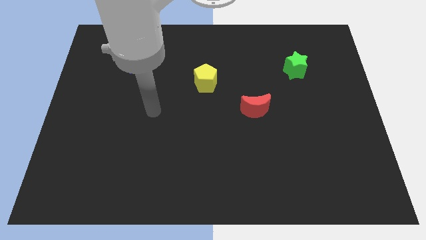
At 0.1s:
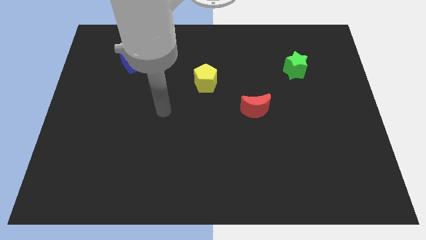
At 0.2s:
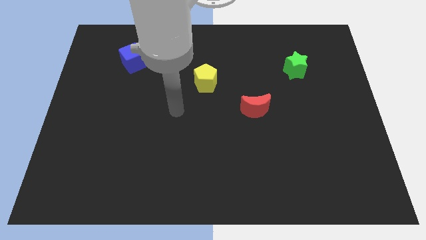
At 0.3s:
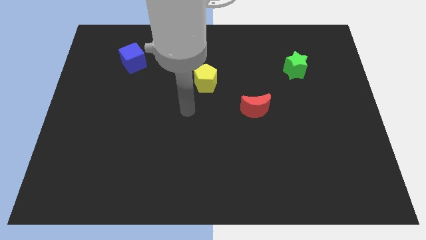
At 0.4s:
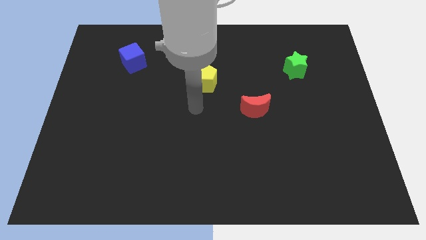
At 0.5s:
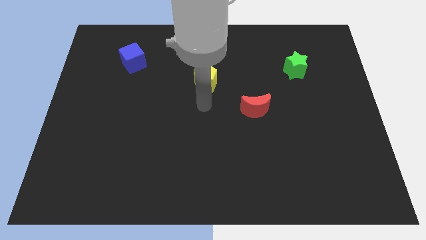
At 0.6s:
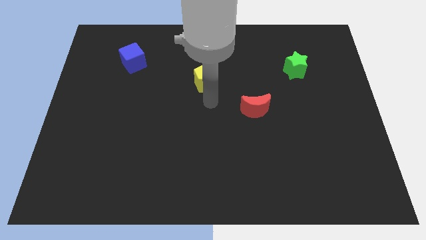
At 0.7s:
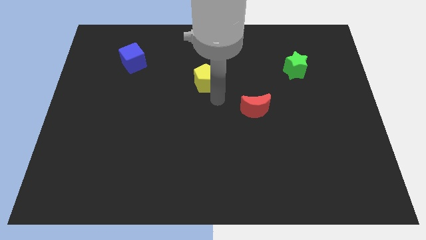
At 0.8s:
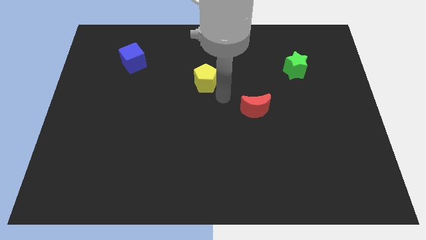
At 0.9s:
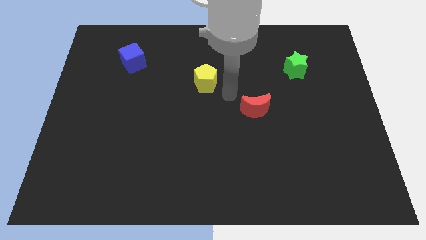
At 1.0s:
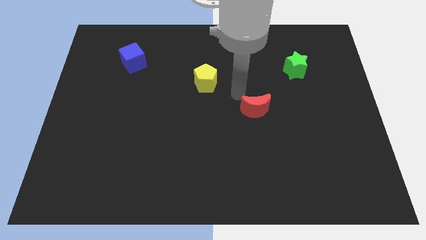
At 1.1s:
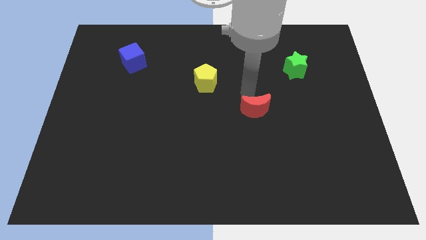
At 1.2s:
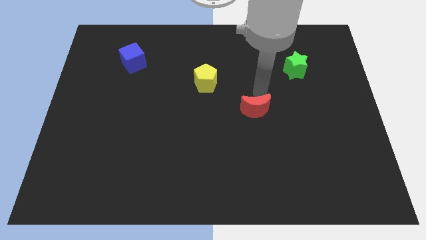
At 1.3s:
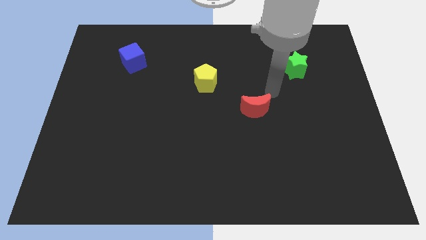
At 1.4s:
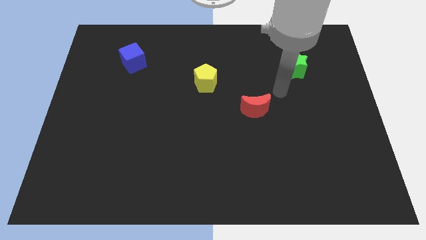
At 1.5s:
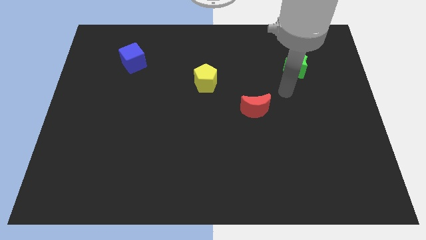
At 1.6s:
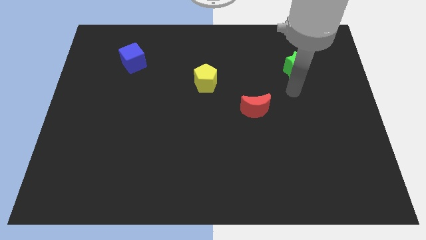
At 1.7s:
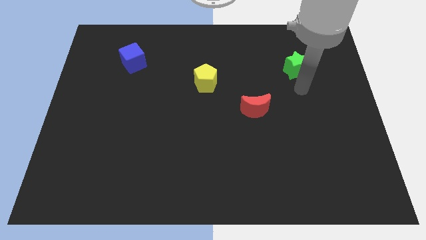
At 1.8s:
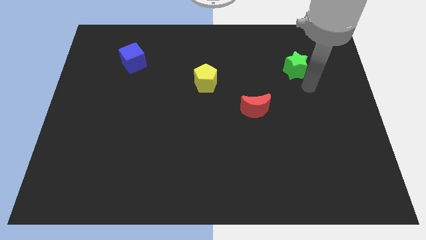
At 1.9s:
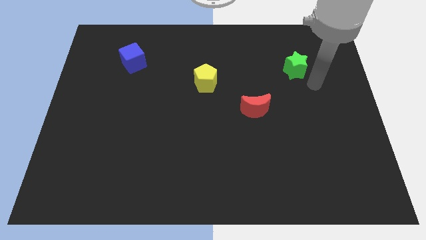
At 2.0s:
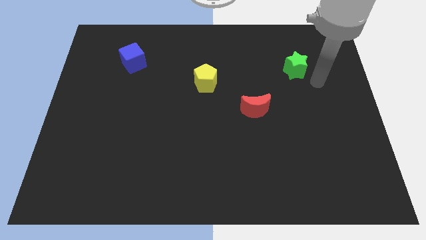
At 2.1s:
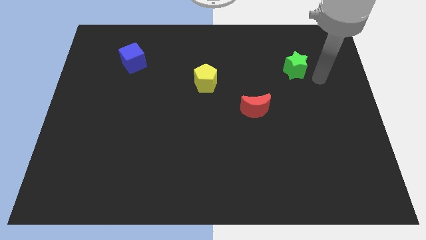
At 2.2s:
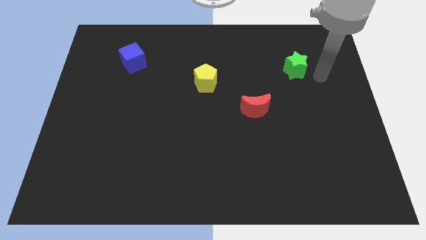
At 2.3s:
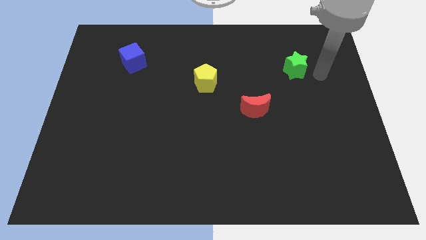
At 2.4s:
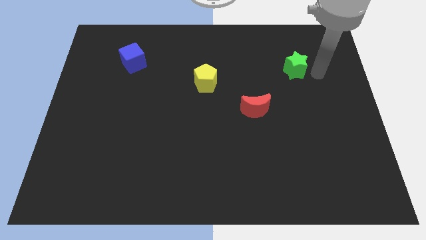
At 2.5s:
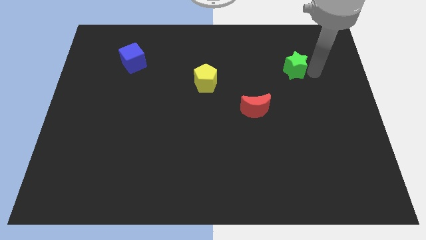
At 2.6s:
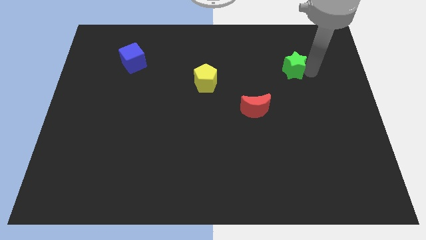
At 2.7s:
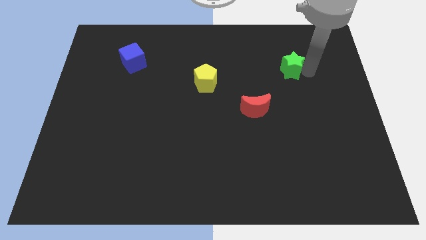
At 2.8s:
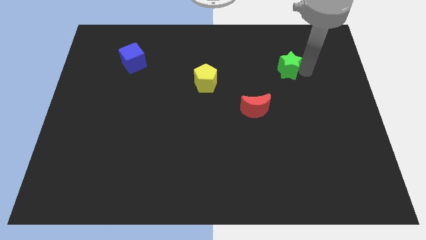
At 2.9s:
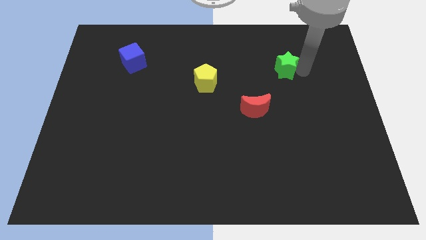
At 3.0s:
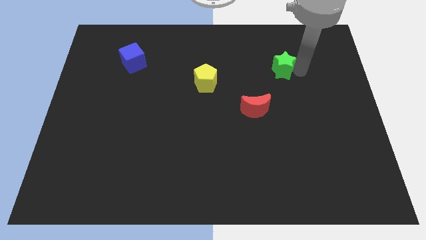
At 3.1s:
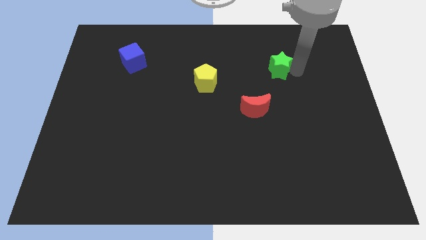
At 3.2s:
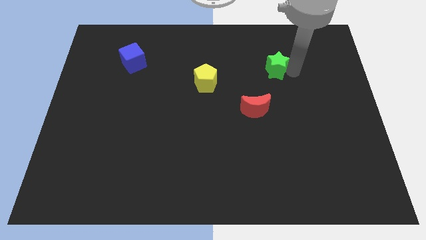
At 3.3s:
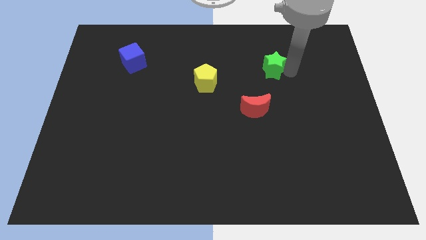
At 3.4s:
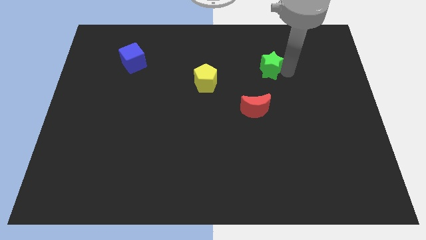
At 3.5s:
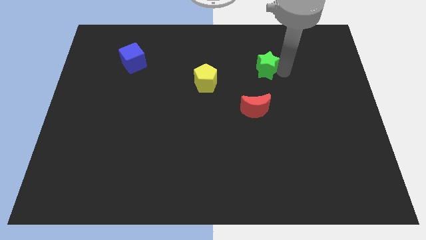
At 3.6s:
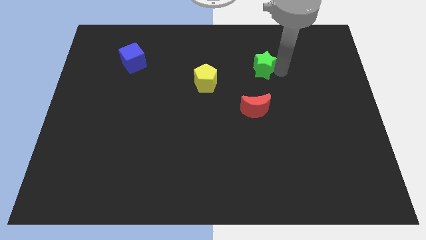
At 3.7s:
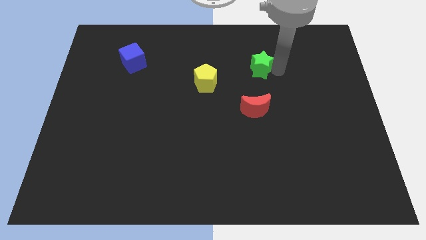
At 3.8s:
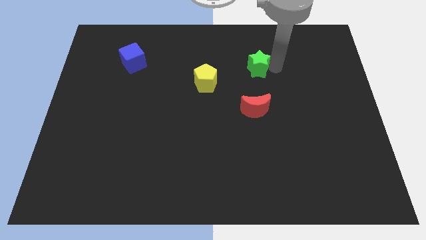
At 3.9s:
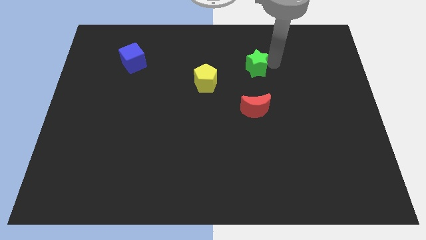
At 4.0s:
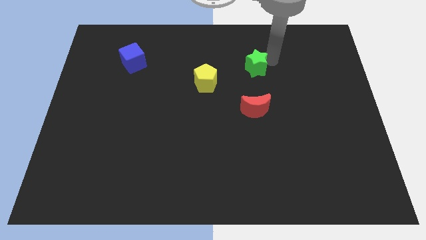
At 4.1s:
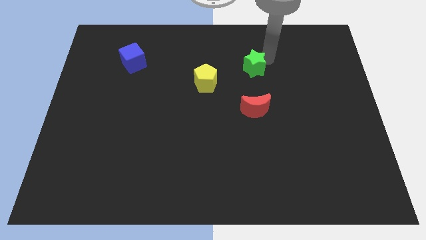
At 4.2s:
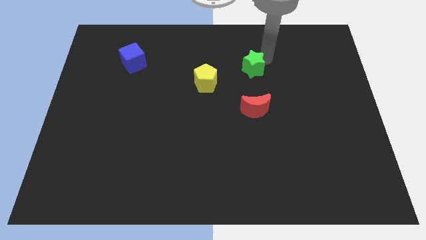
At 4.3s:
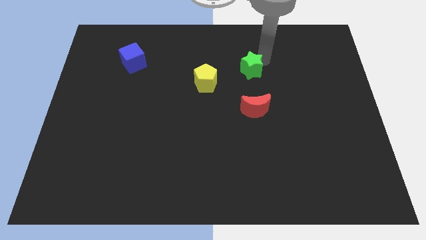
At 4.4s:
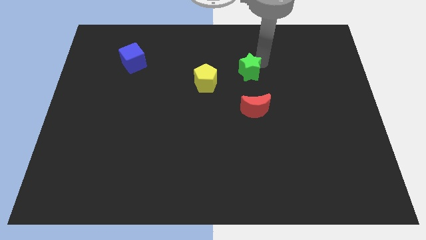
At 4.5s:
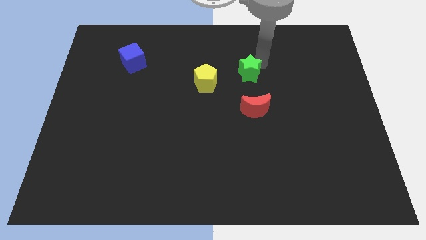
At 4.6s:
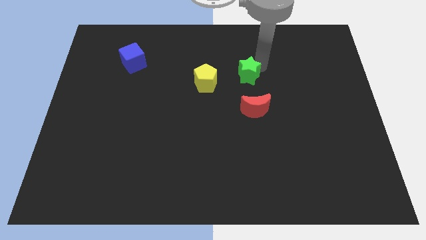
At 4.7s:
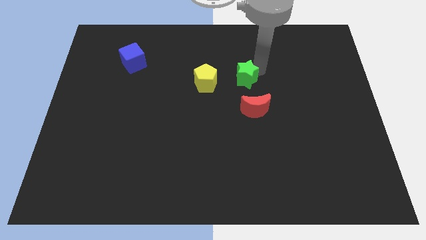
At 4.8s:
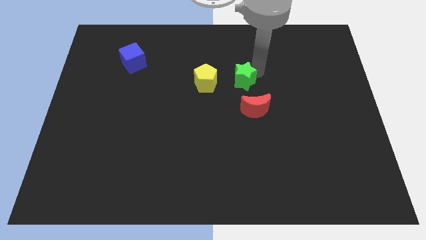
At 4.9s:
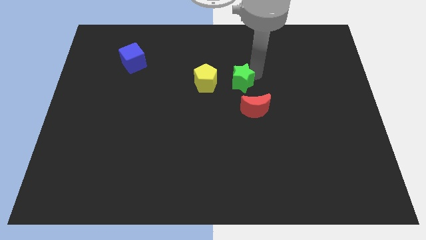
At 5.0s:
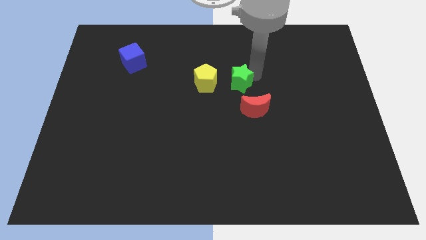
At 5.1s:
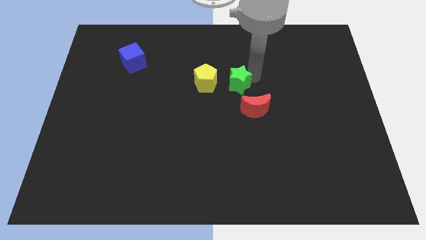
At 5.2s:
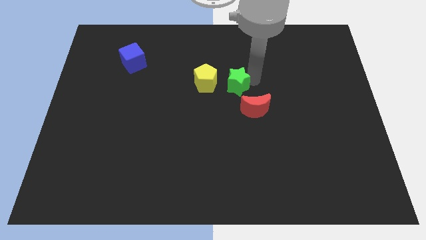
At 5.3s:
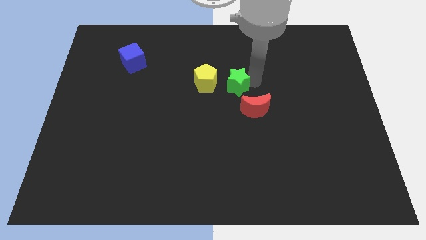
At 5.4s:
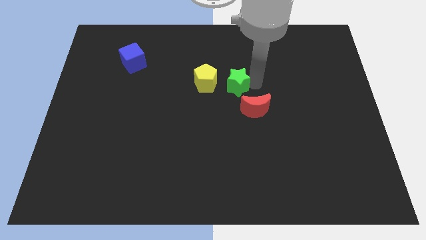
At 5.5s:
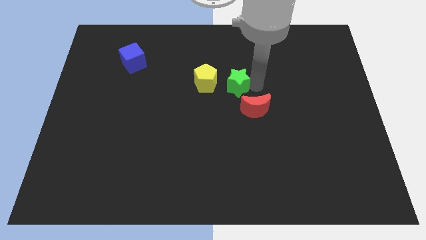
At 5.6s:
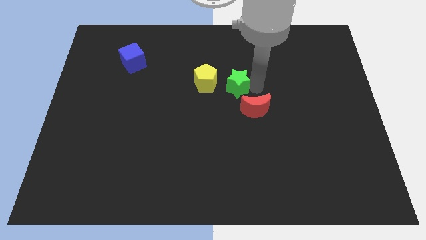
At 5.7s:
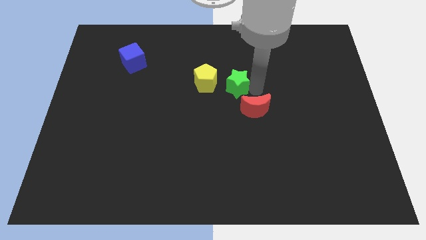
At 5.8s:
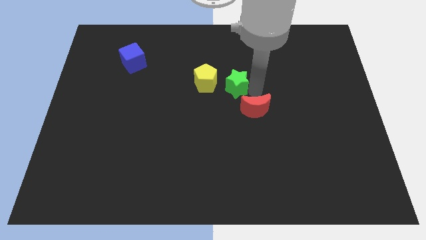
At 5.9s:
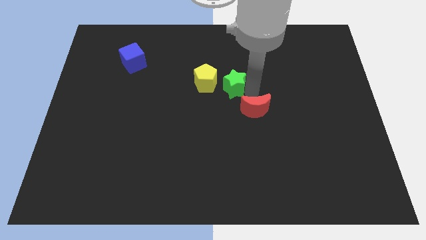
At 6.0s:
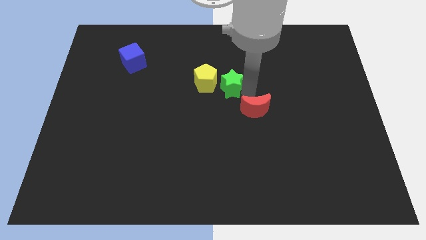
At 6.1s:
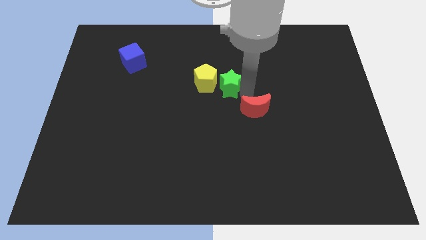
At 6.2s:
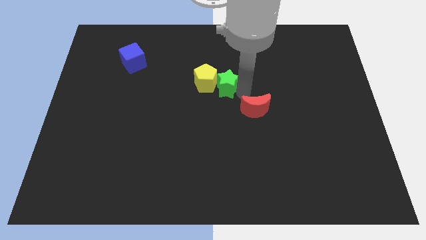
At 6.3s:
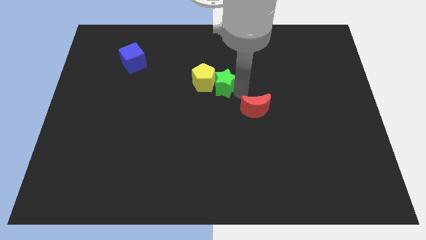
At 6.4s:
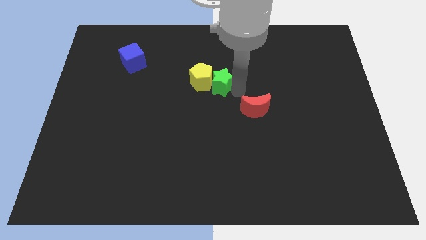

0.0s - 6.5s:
put the green block next to the yellow pentagon

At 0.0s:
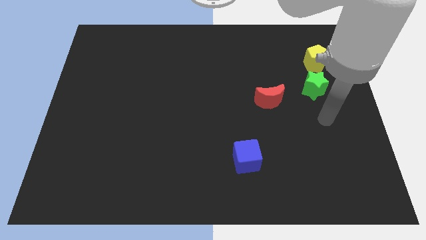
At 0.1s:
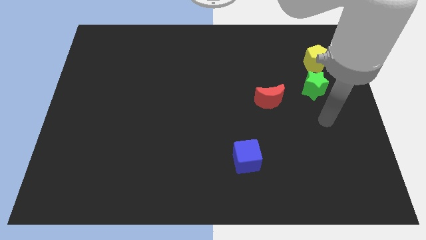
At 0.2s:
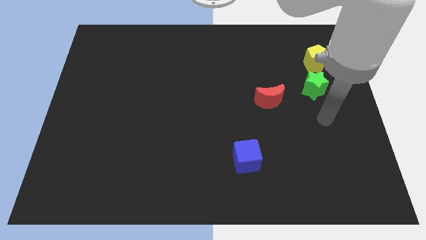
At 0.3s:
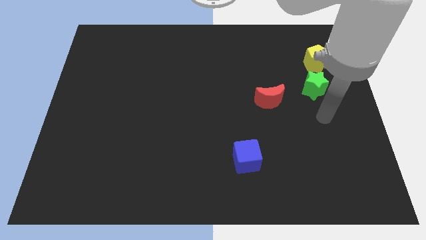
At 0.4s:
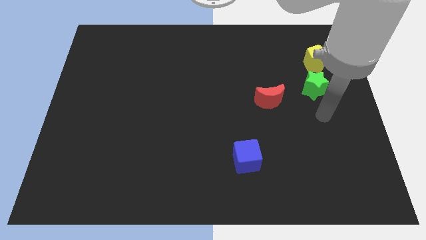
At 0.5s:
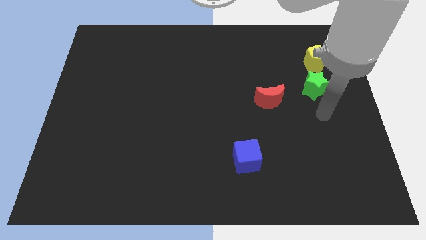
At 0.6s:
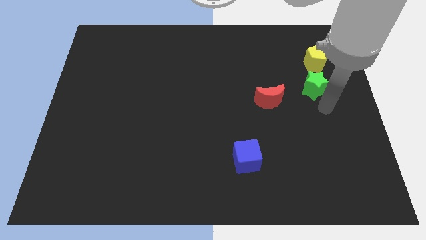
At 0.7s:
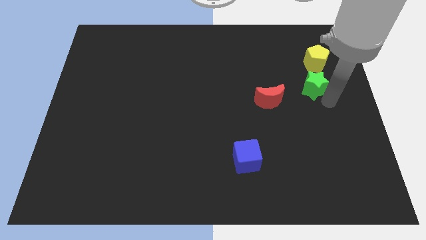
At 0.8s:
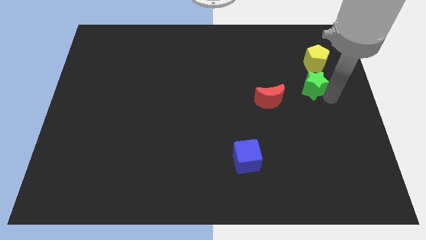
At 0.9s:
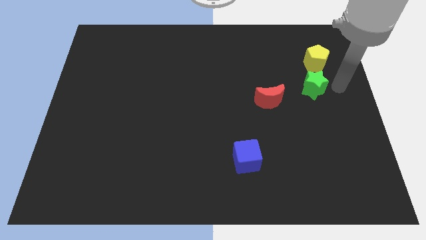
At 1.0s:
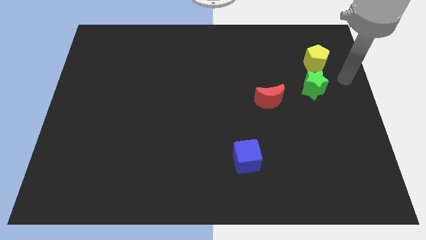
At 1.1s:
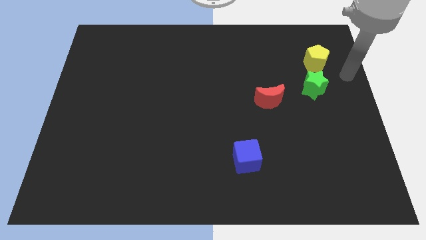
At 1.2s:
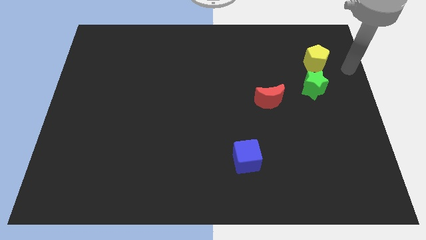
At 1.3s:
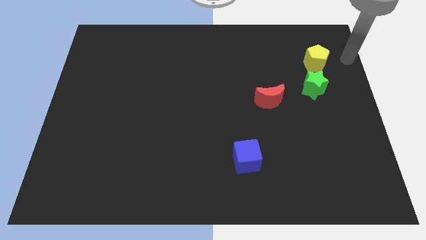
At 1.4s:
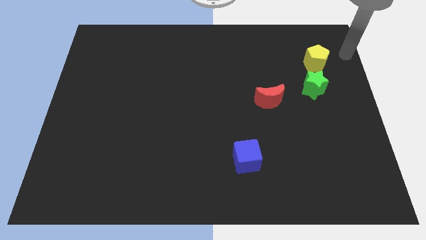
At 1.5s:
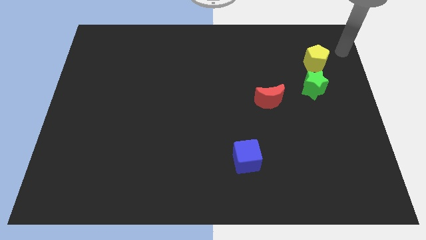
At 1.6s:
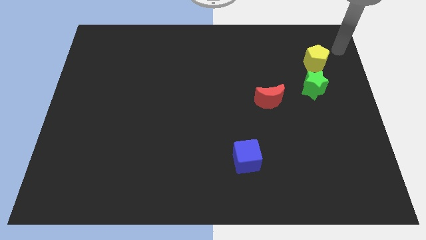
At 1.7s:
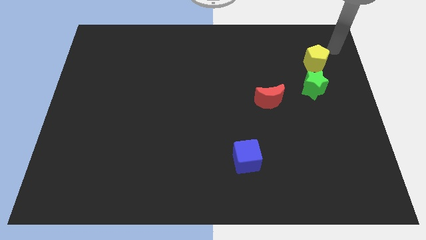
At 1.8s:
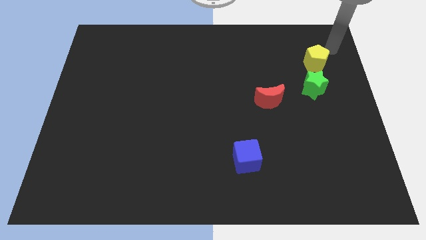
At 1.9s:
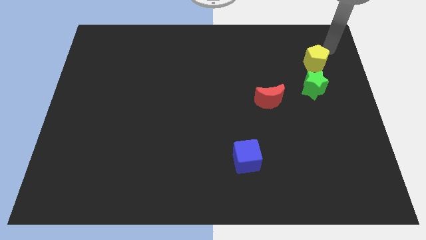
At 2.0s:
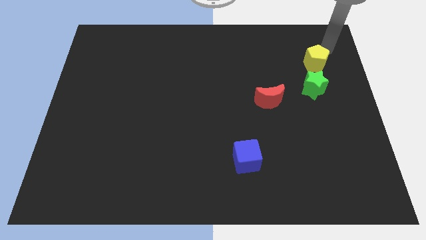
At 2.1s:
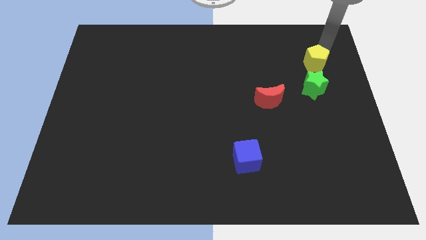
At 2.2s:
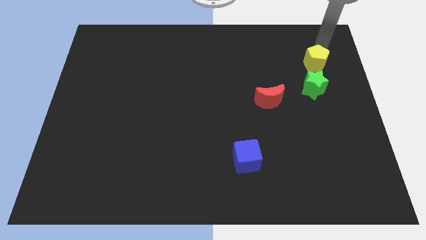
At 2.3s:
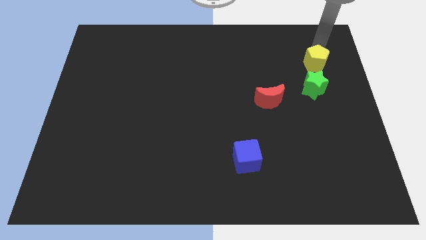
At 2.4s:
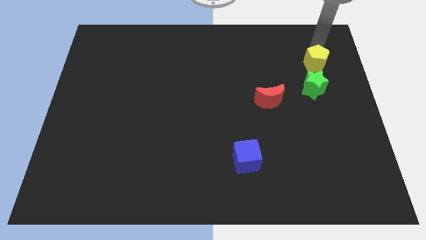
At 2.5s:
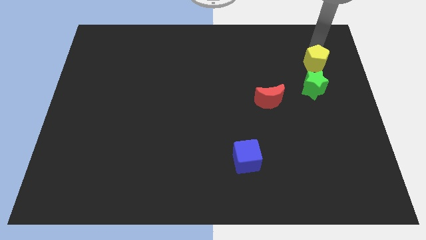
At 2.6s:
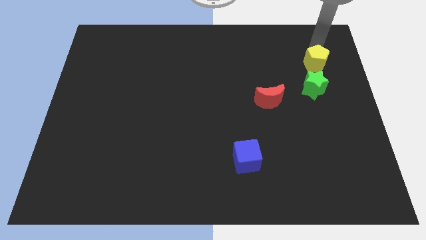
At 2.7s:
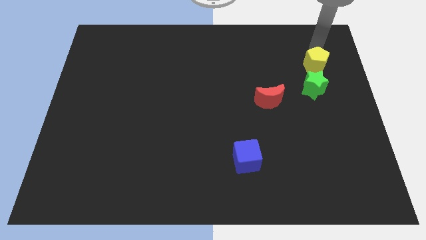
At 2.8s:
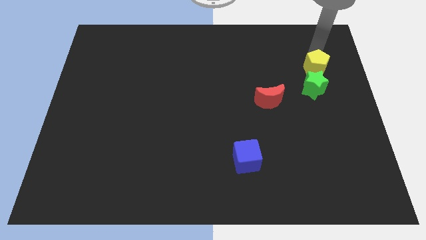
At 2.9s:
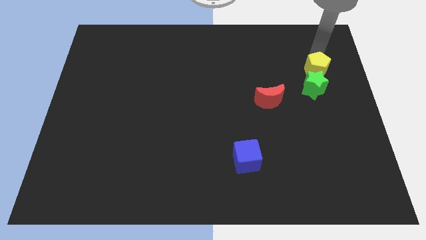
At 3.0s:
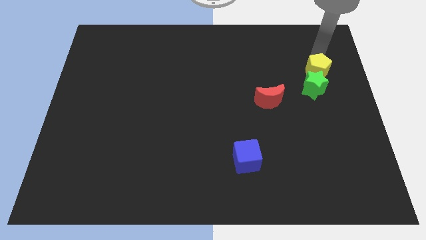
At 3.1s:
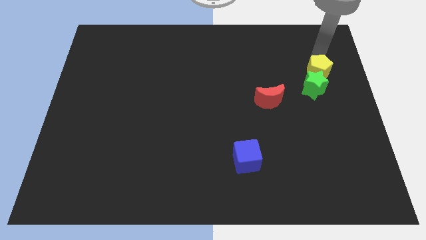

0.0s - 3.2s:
put the yellow pentagon next to the green block
